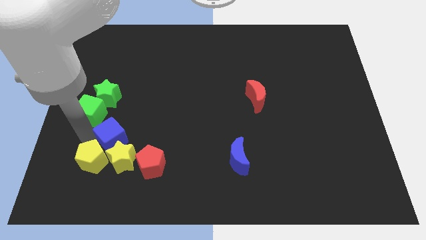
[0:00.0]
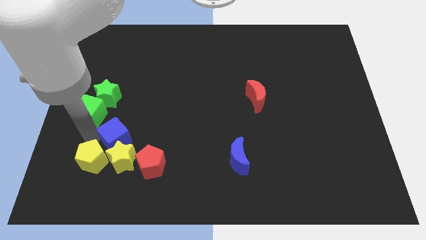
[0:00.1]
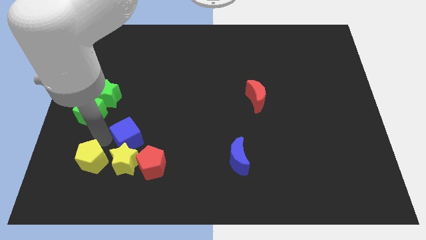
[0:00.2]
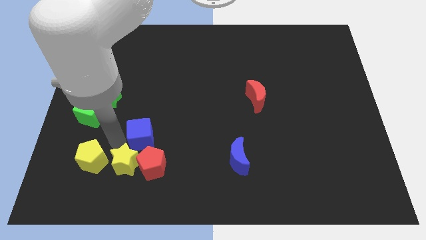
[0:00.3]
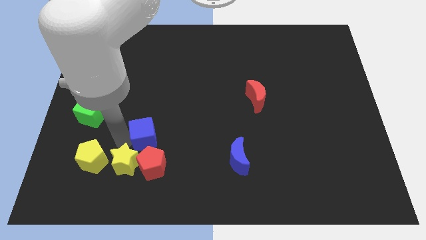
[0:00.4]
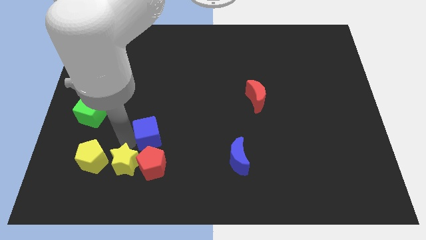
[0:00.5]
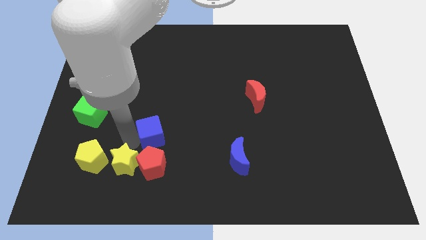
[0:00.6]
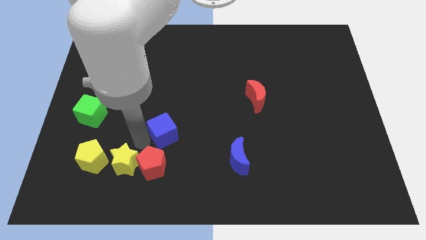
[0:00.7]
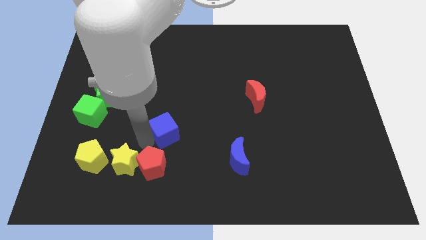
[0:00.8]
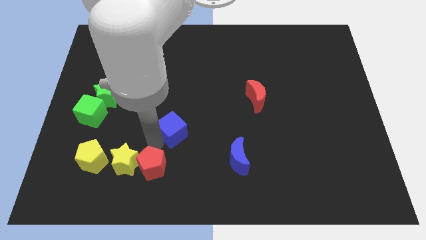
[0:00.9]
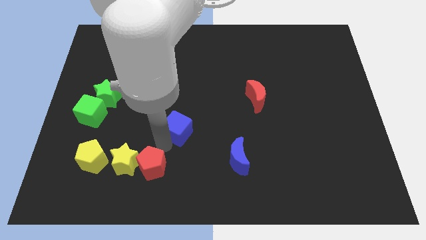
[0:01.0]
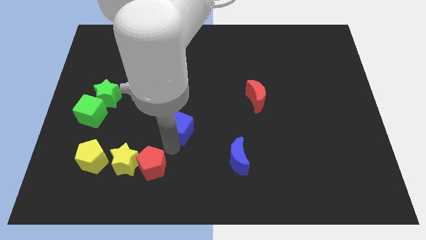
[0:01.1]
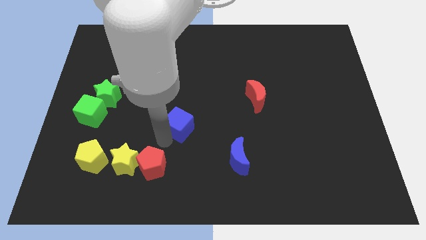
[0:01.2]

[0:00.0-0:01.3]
move the blue cube to the center

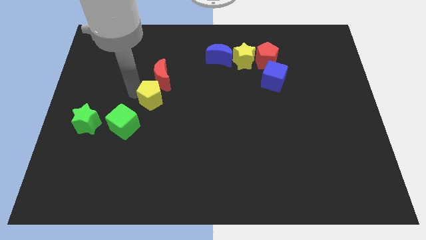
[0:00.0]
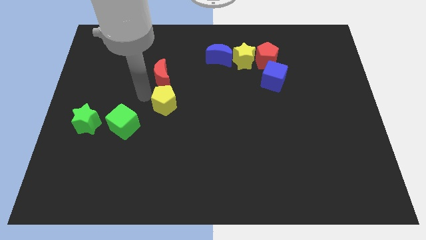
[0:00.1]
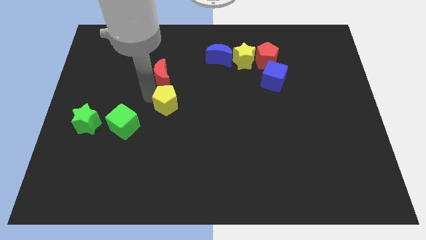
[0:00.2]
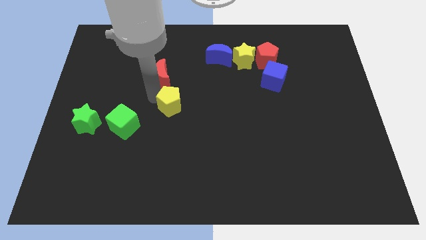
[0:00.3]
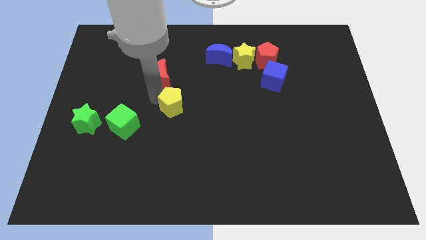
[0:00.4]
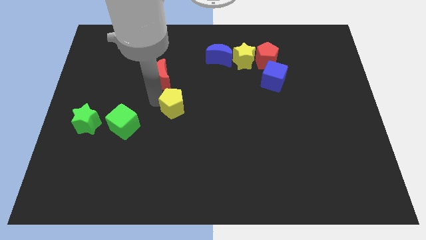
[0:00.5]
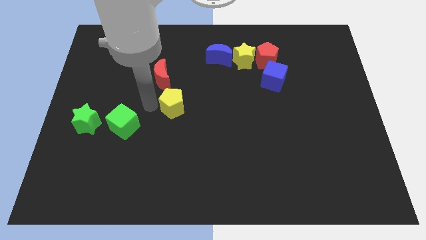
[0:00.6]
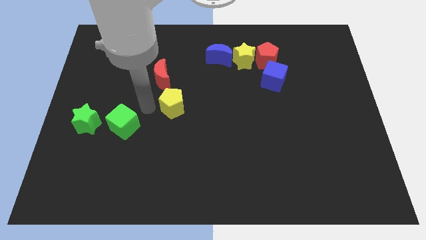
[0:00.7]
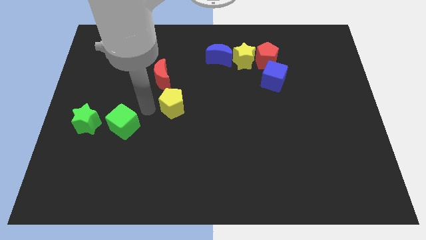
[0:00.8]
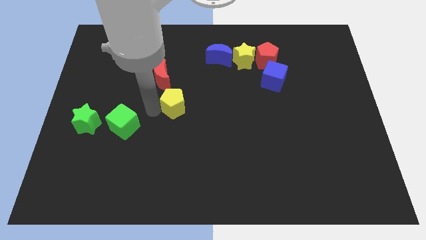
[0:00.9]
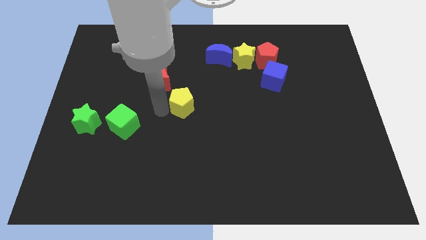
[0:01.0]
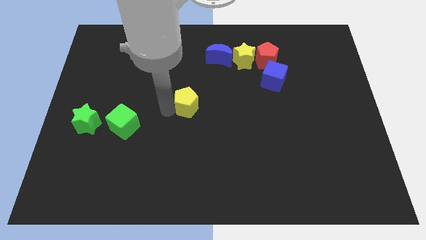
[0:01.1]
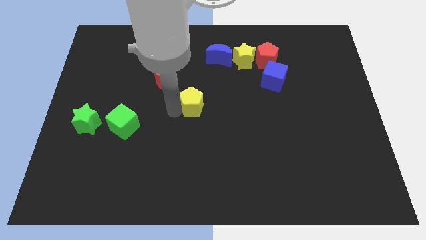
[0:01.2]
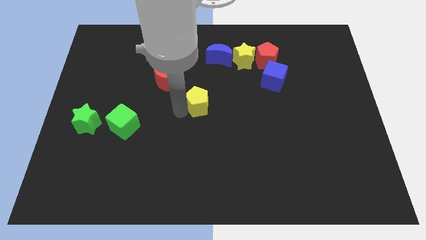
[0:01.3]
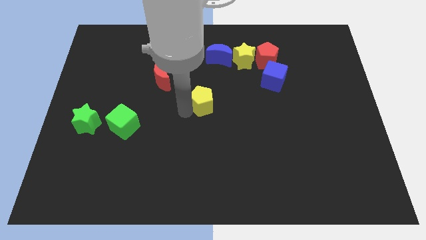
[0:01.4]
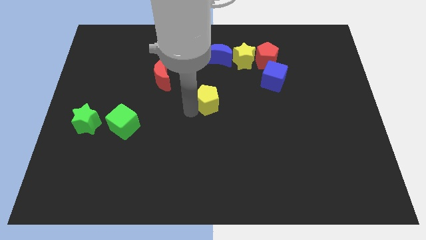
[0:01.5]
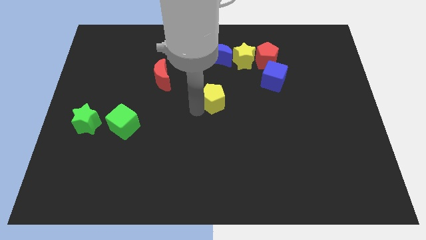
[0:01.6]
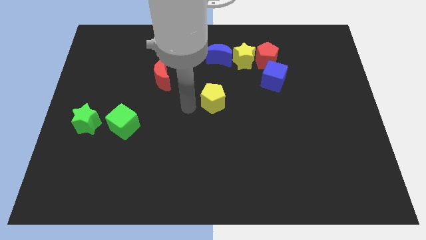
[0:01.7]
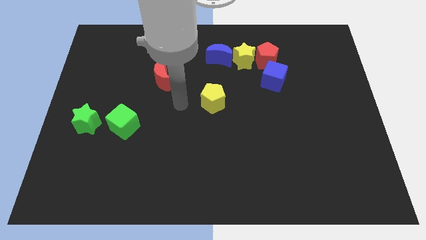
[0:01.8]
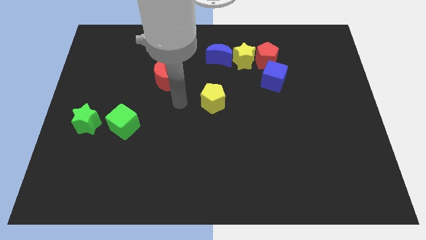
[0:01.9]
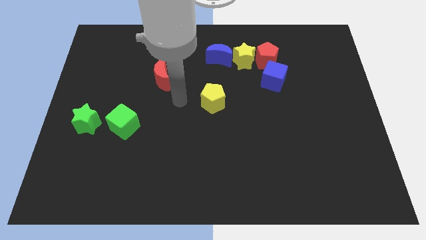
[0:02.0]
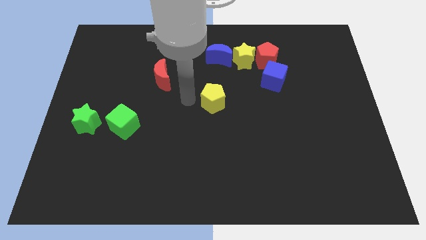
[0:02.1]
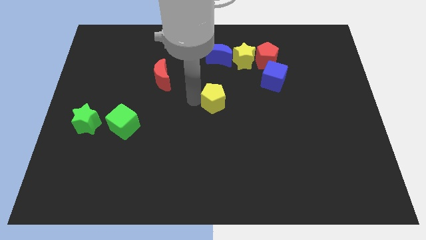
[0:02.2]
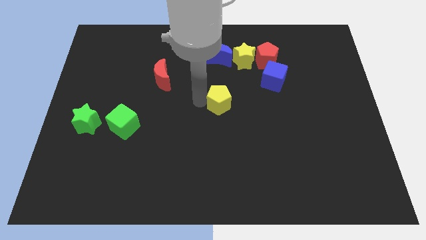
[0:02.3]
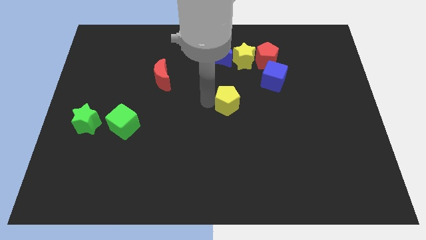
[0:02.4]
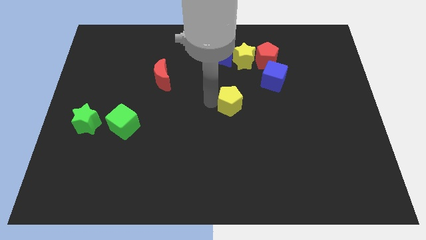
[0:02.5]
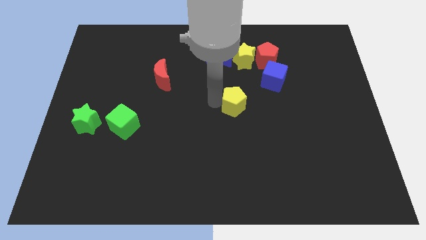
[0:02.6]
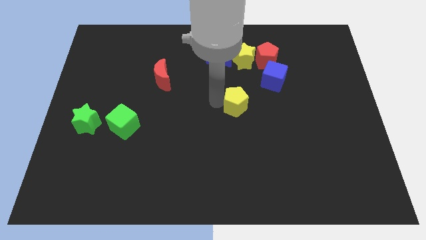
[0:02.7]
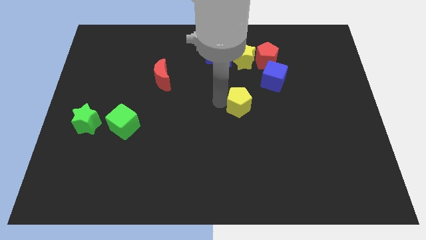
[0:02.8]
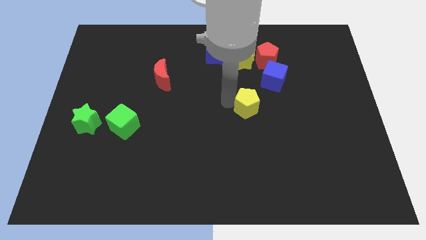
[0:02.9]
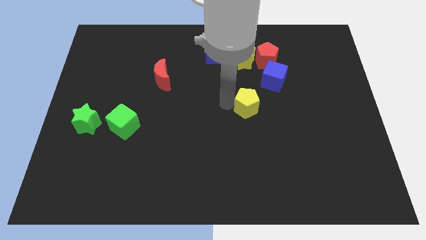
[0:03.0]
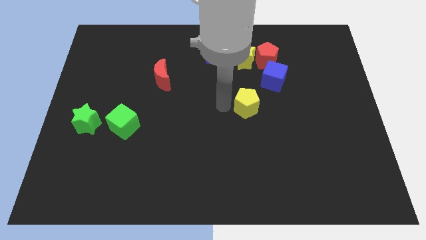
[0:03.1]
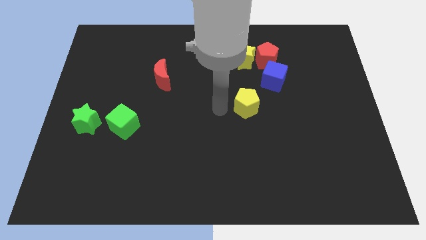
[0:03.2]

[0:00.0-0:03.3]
put the yellow pentagon to the bottom side of the yellow star

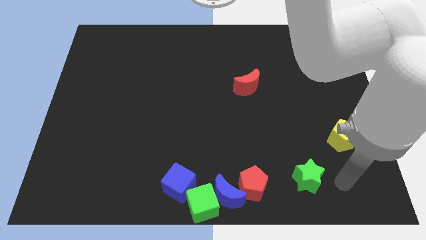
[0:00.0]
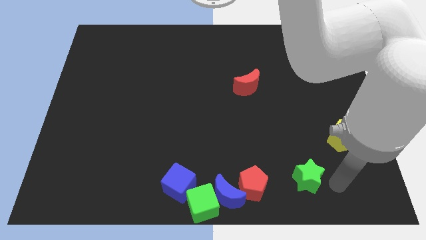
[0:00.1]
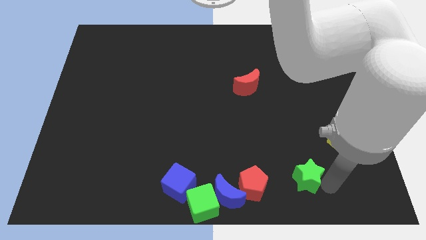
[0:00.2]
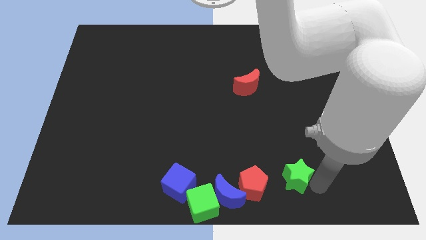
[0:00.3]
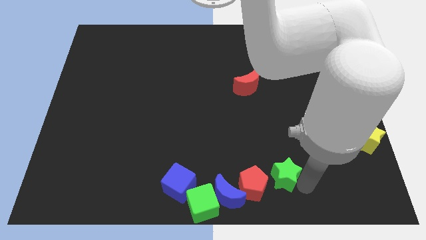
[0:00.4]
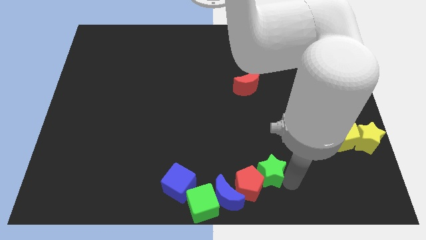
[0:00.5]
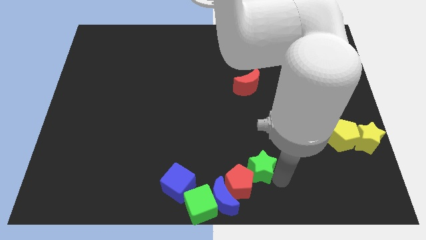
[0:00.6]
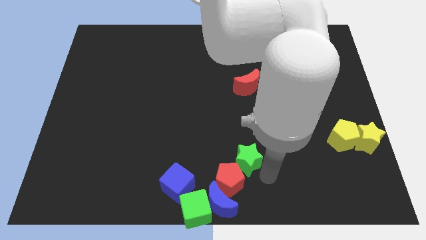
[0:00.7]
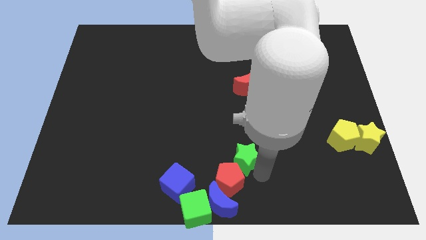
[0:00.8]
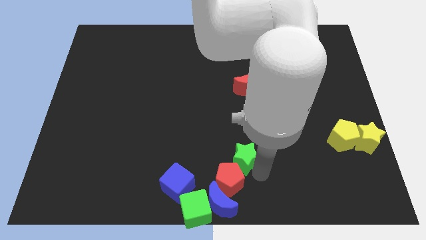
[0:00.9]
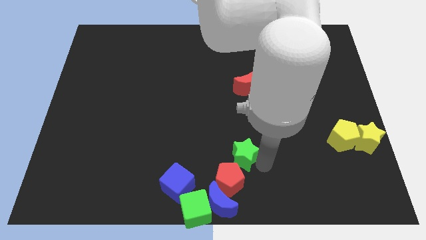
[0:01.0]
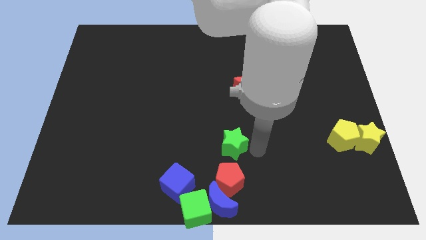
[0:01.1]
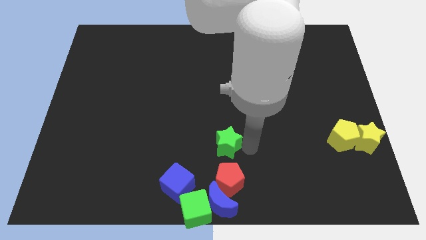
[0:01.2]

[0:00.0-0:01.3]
move the green star to the top side of the red pentagon

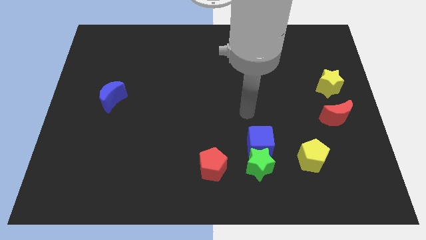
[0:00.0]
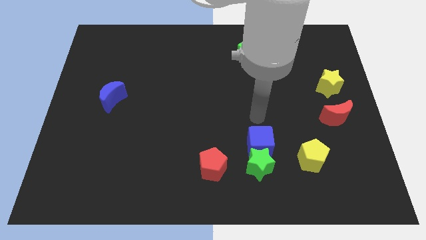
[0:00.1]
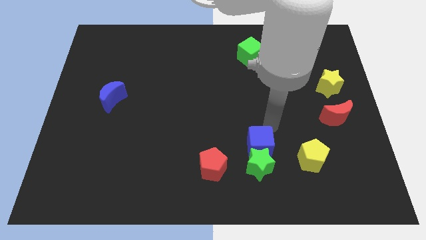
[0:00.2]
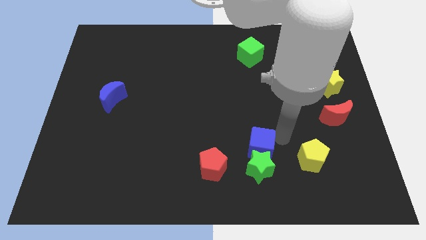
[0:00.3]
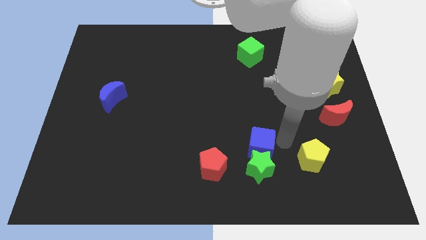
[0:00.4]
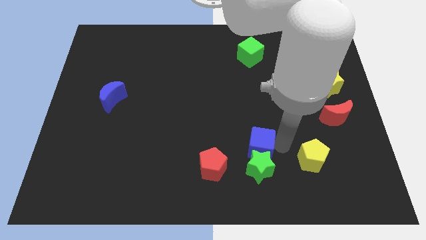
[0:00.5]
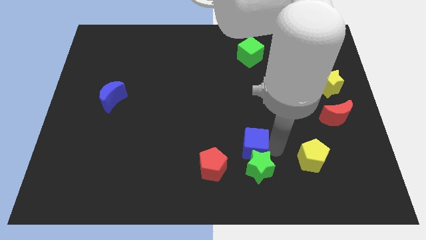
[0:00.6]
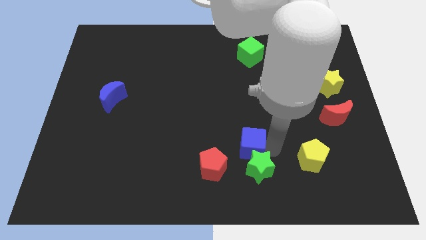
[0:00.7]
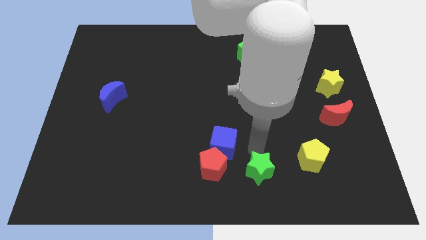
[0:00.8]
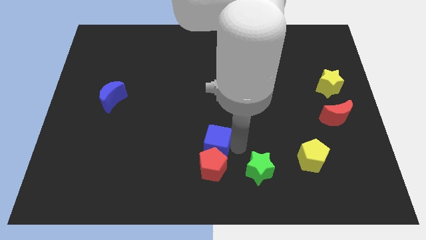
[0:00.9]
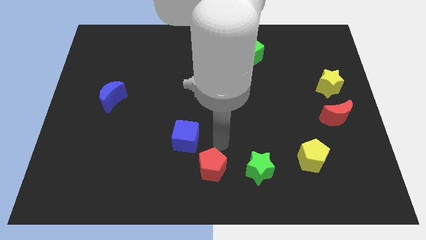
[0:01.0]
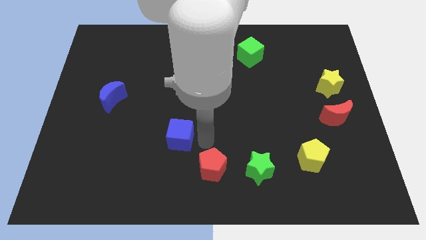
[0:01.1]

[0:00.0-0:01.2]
separate the blue cube from the green star

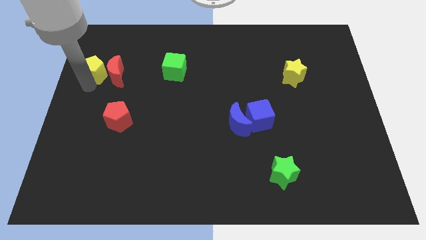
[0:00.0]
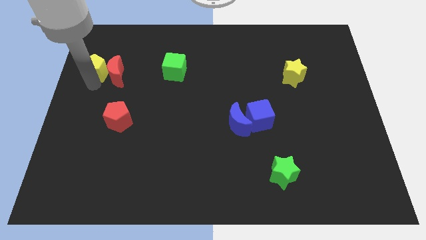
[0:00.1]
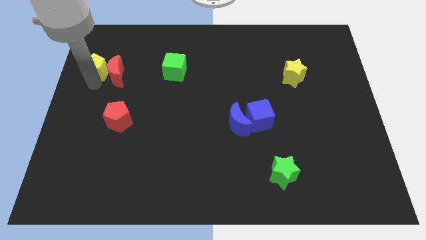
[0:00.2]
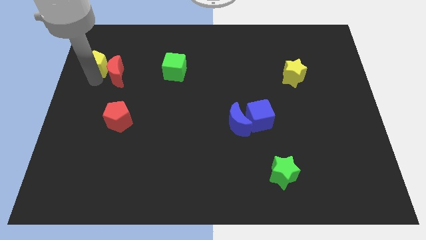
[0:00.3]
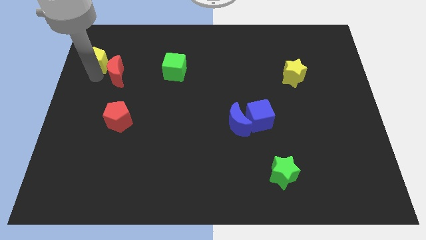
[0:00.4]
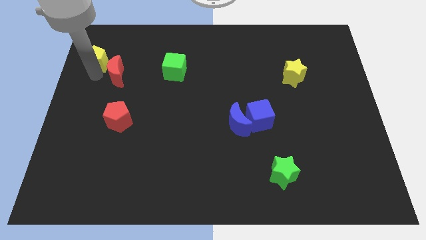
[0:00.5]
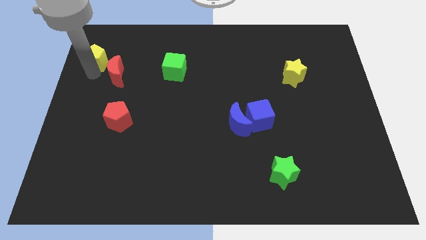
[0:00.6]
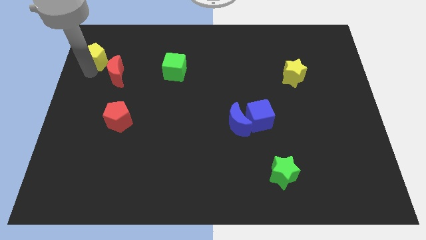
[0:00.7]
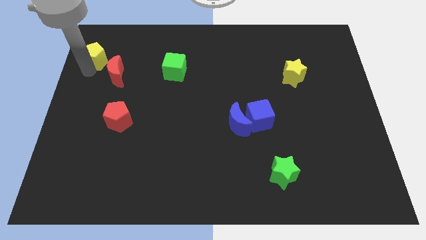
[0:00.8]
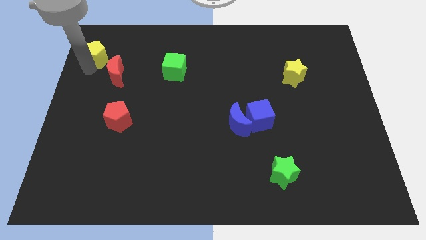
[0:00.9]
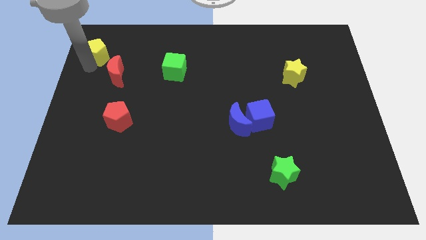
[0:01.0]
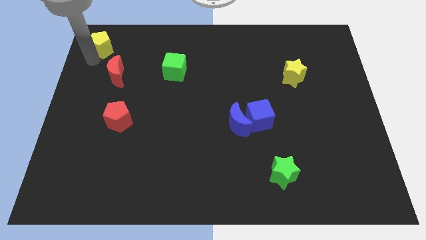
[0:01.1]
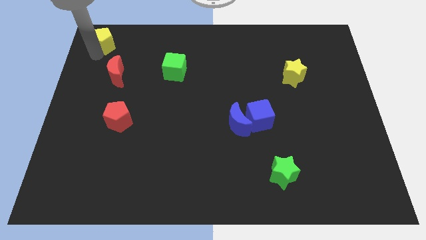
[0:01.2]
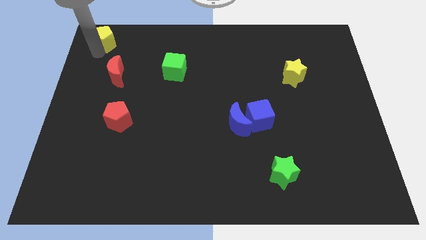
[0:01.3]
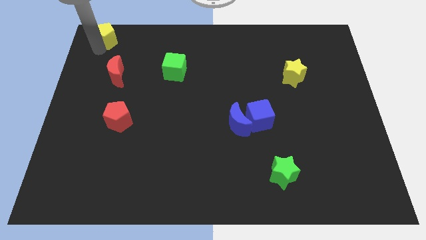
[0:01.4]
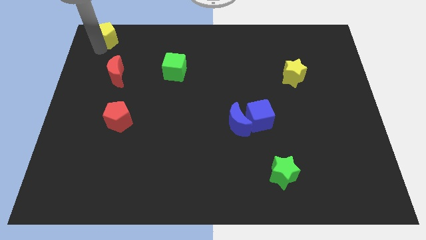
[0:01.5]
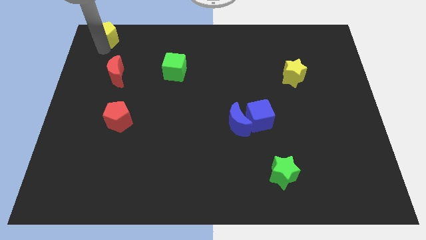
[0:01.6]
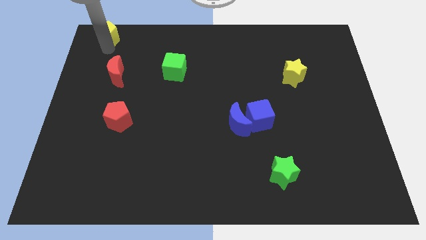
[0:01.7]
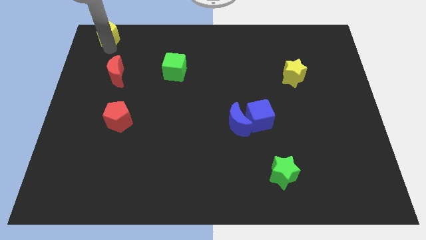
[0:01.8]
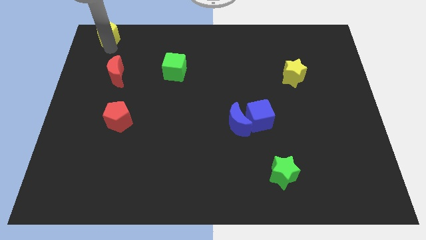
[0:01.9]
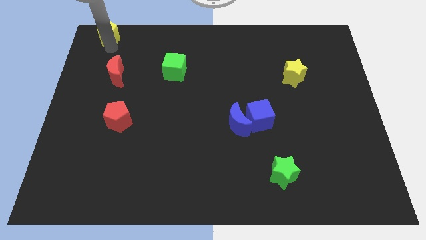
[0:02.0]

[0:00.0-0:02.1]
slide yellow pentagon towards top left
